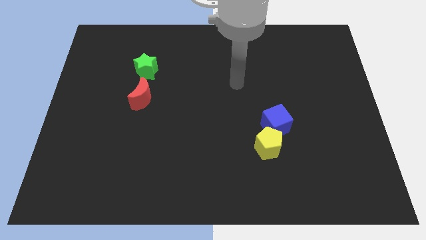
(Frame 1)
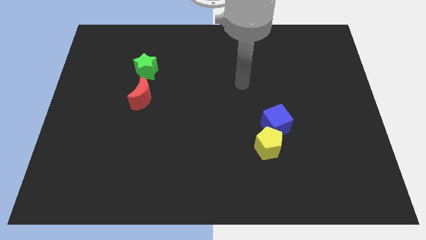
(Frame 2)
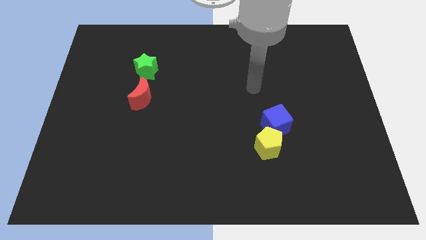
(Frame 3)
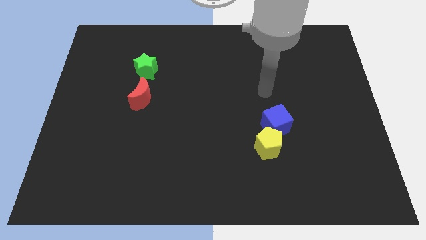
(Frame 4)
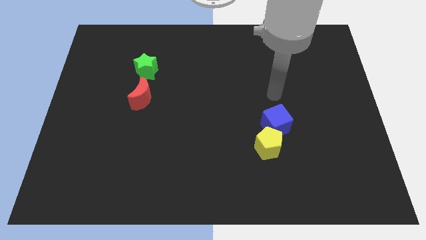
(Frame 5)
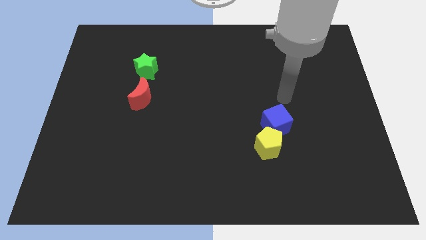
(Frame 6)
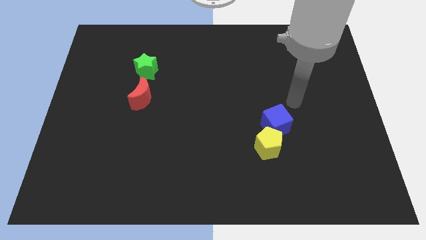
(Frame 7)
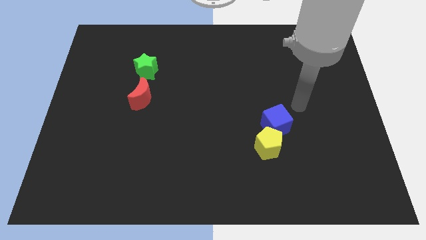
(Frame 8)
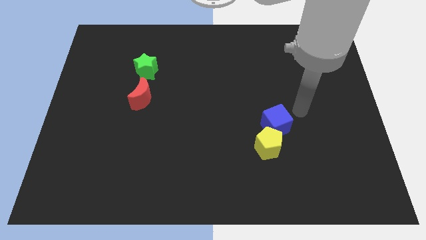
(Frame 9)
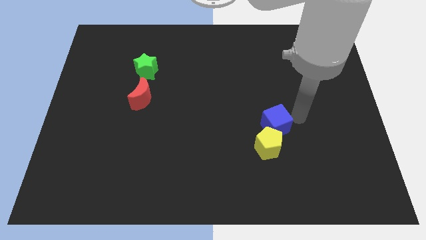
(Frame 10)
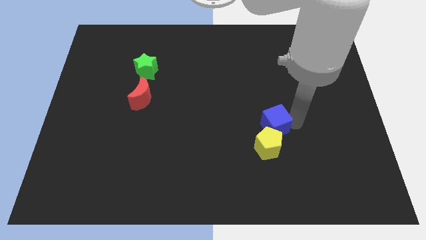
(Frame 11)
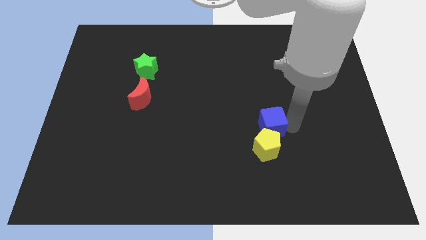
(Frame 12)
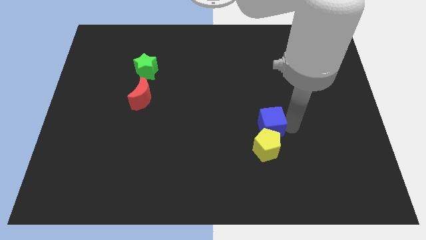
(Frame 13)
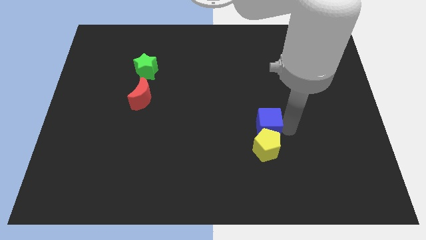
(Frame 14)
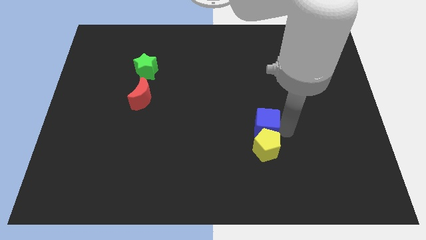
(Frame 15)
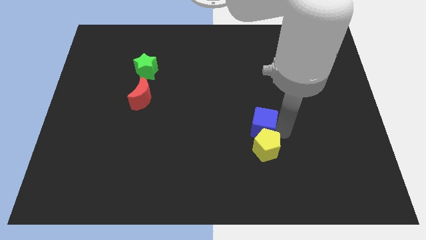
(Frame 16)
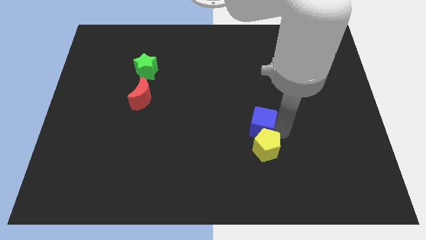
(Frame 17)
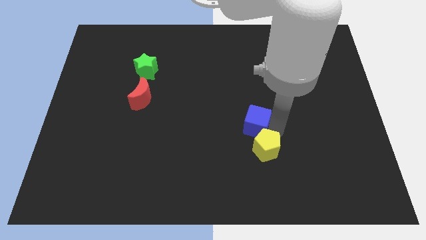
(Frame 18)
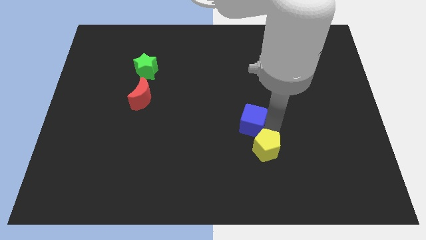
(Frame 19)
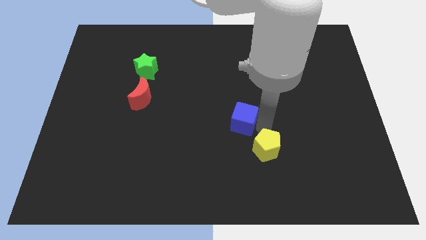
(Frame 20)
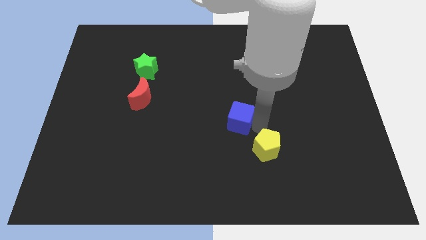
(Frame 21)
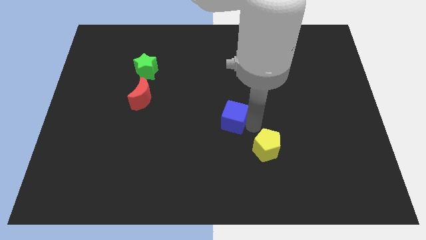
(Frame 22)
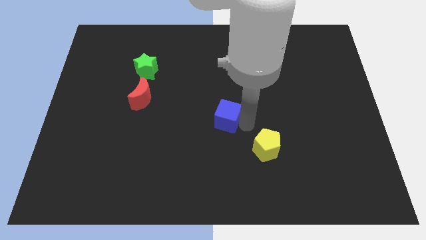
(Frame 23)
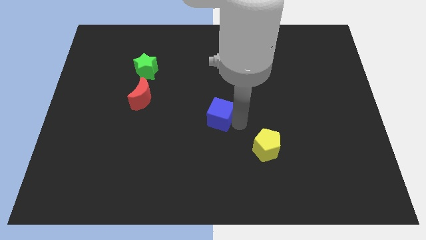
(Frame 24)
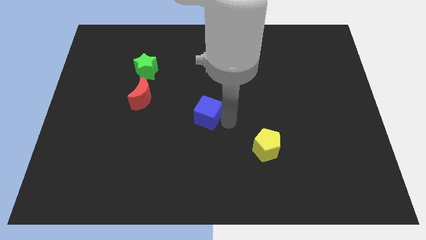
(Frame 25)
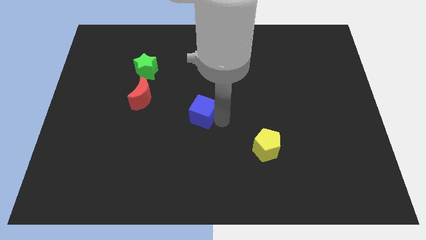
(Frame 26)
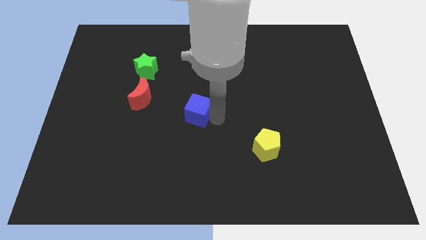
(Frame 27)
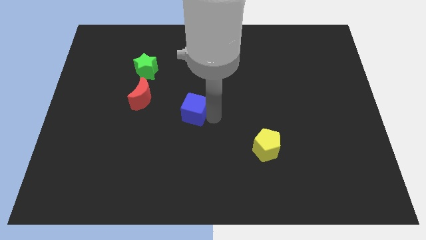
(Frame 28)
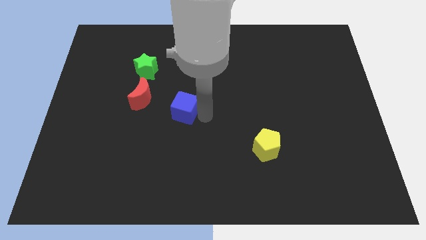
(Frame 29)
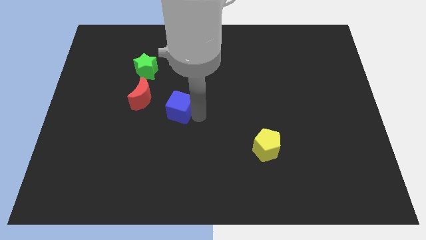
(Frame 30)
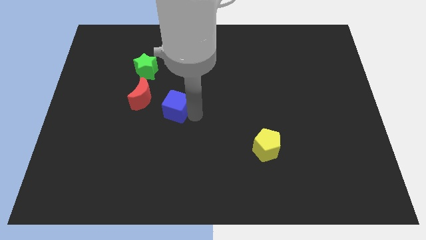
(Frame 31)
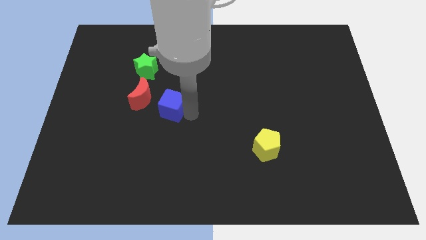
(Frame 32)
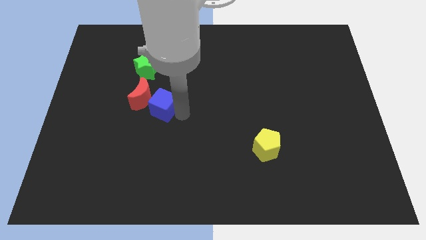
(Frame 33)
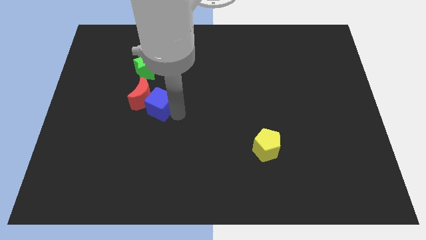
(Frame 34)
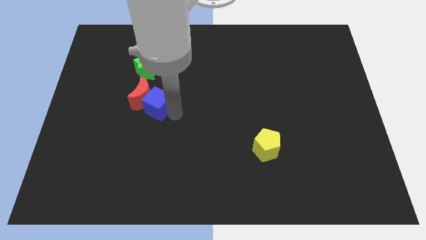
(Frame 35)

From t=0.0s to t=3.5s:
move the blue cube to the moon

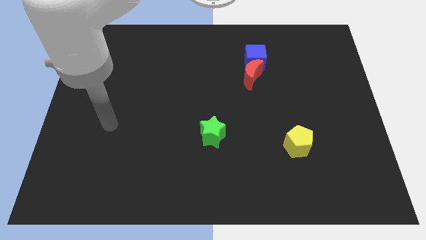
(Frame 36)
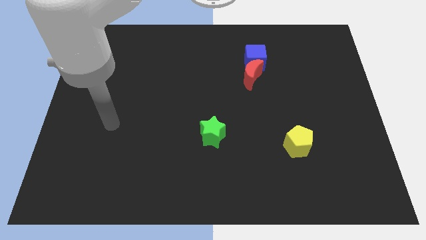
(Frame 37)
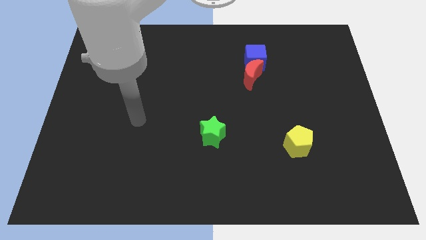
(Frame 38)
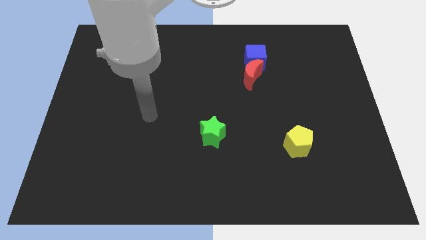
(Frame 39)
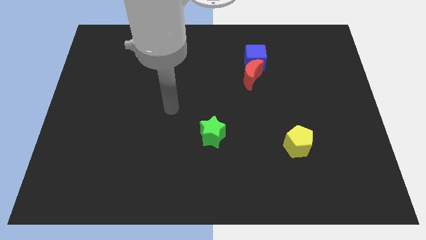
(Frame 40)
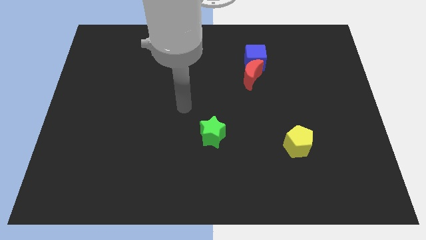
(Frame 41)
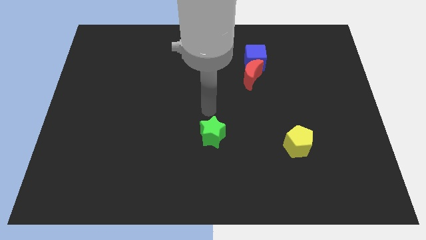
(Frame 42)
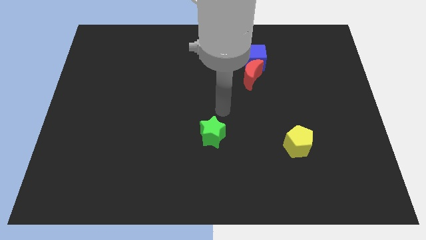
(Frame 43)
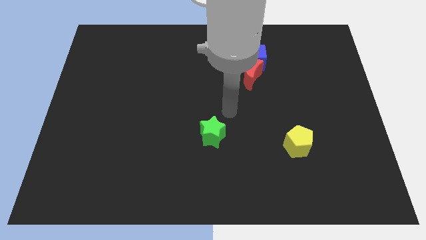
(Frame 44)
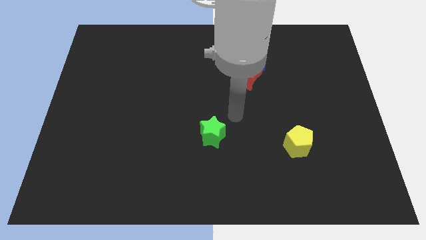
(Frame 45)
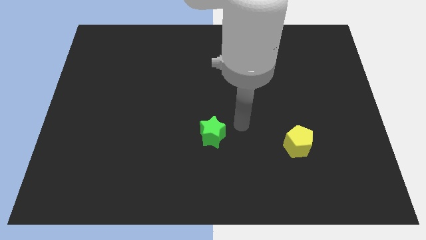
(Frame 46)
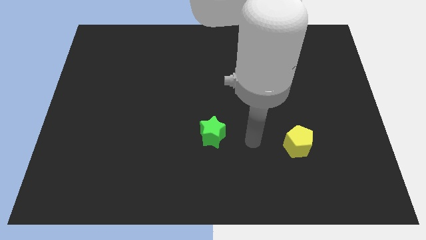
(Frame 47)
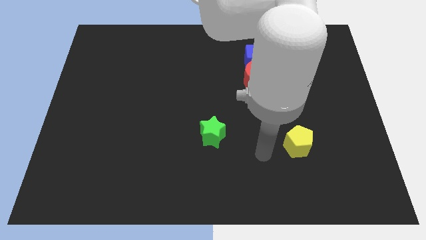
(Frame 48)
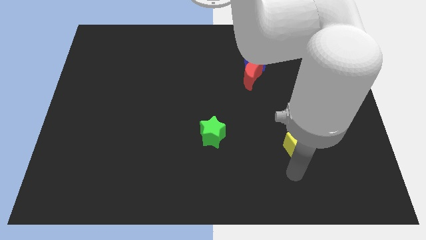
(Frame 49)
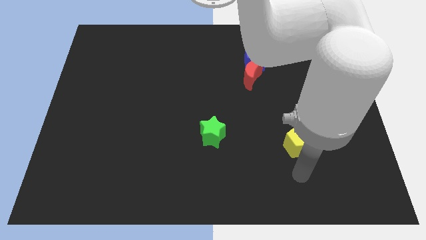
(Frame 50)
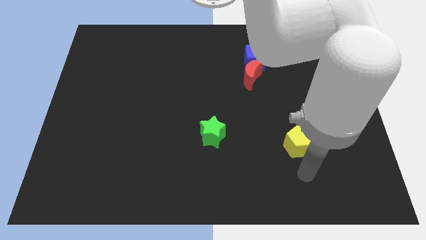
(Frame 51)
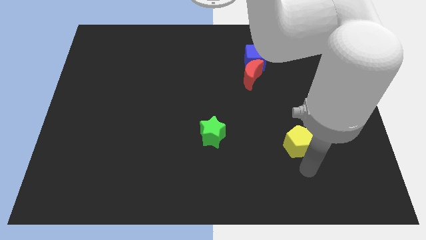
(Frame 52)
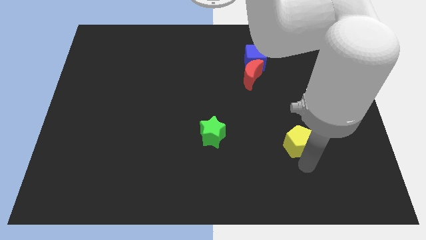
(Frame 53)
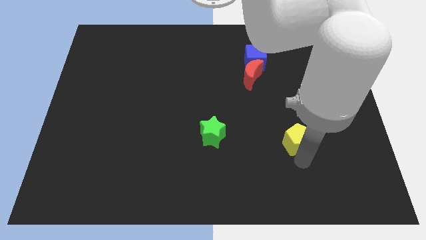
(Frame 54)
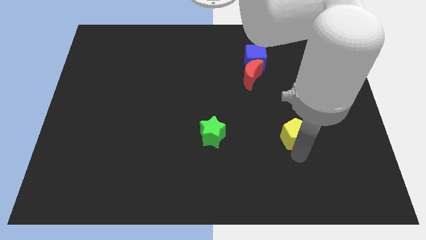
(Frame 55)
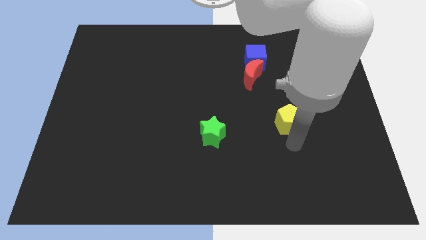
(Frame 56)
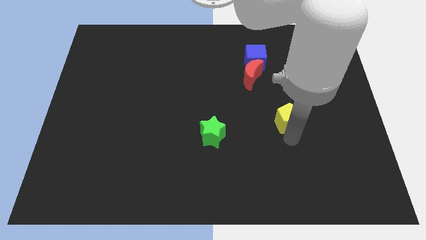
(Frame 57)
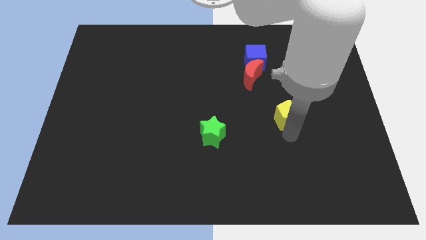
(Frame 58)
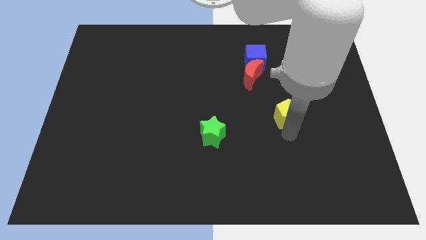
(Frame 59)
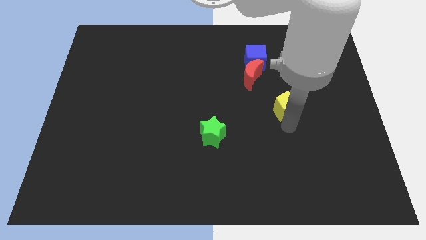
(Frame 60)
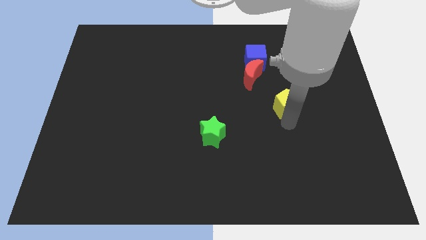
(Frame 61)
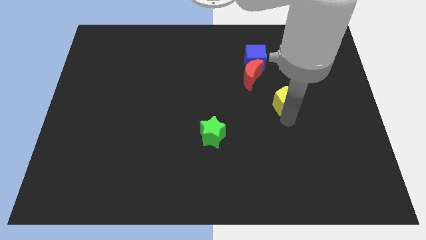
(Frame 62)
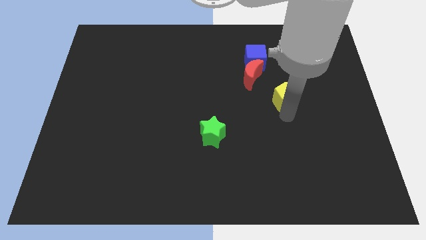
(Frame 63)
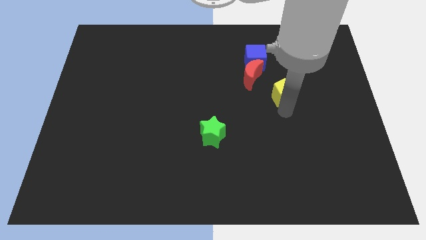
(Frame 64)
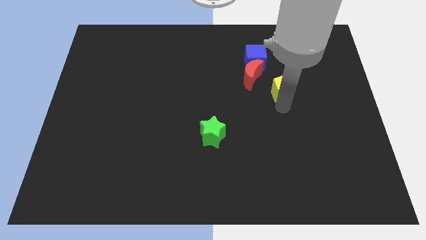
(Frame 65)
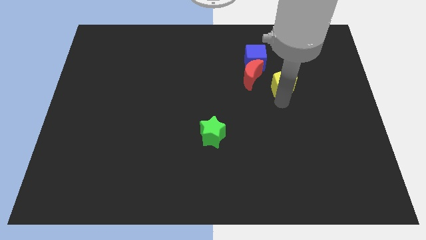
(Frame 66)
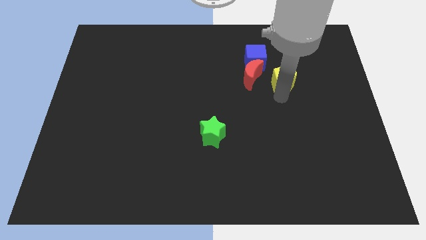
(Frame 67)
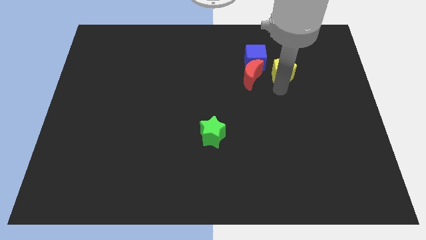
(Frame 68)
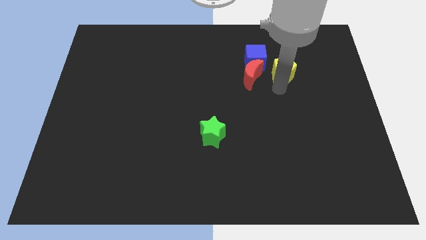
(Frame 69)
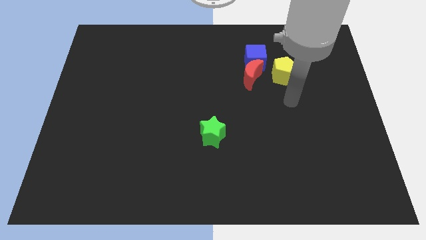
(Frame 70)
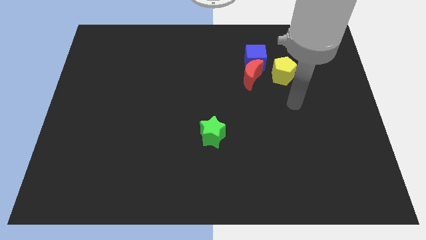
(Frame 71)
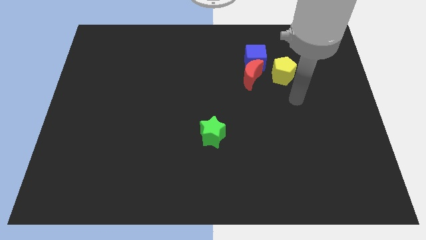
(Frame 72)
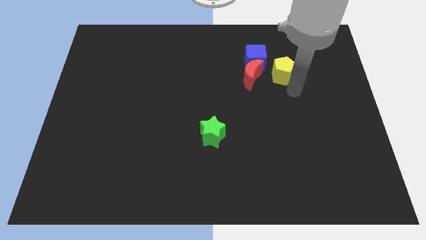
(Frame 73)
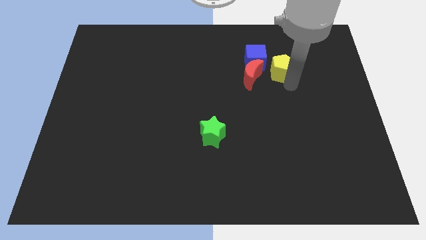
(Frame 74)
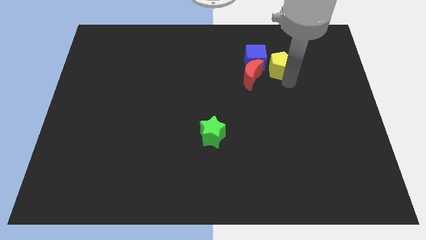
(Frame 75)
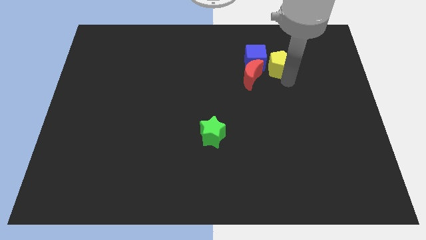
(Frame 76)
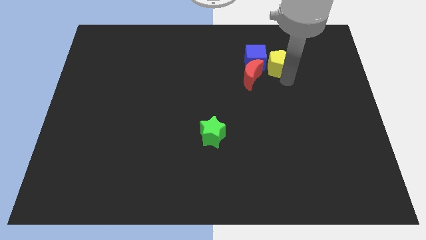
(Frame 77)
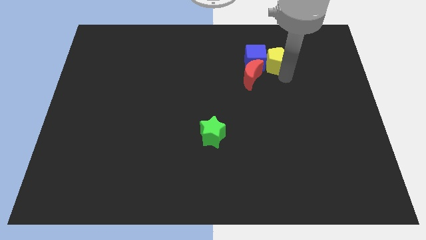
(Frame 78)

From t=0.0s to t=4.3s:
slide the pentagon close to the blue block

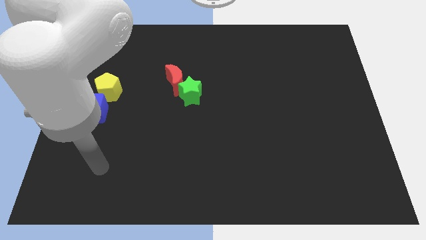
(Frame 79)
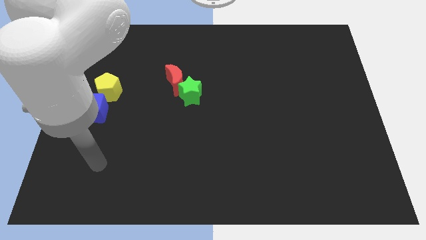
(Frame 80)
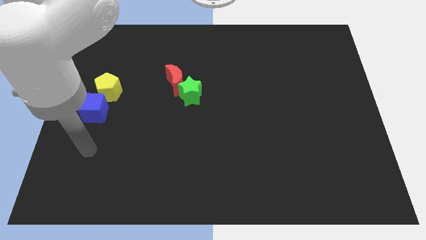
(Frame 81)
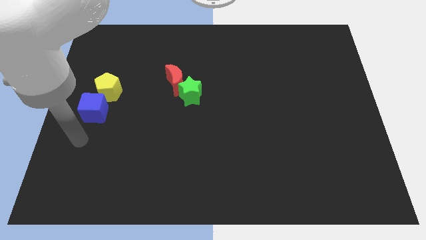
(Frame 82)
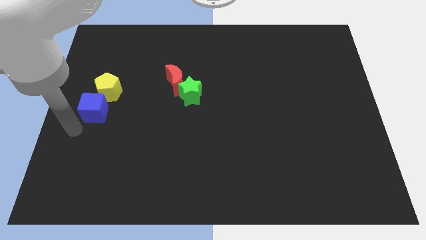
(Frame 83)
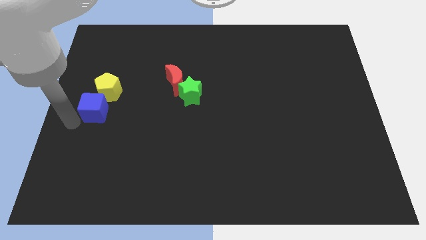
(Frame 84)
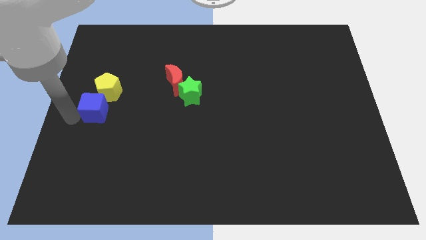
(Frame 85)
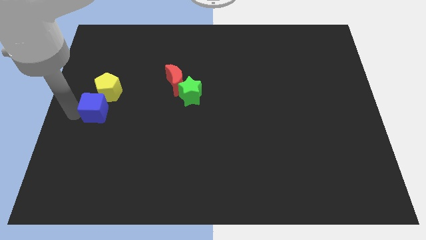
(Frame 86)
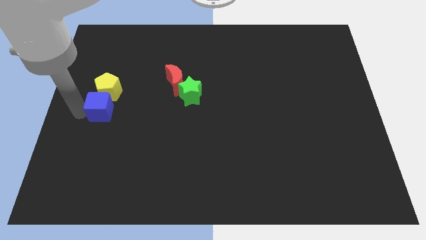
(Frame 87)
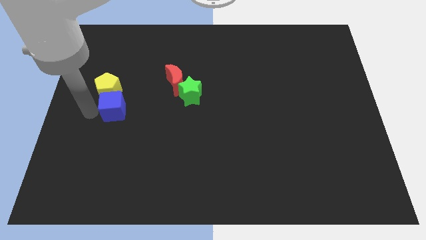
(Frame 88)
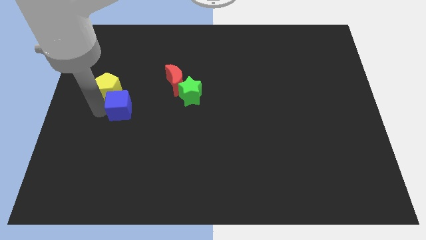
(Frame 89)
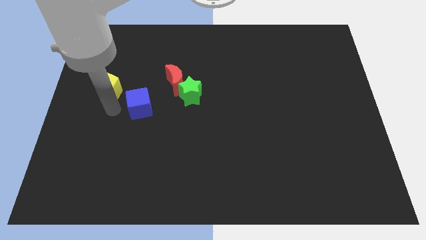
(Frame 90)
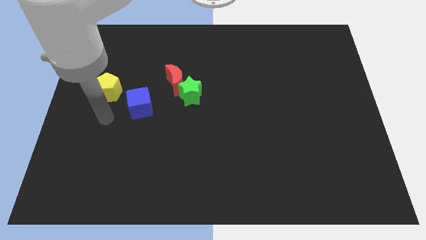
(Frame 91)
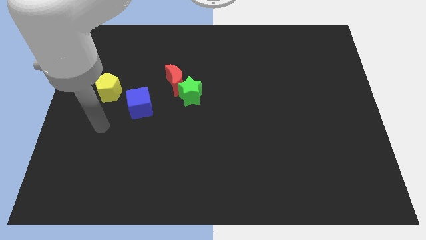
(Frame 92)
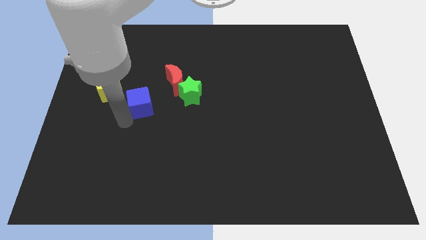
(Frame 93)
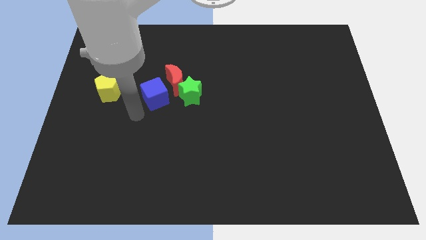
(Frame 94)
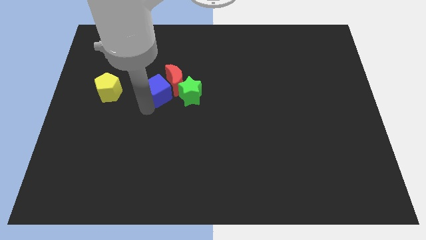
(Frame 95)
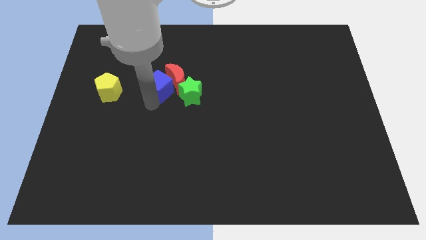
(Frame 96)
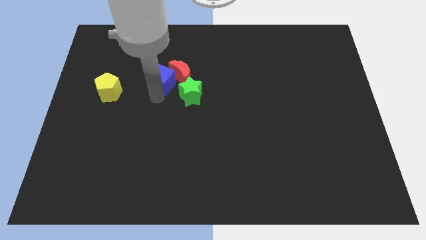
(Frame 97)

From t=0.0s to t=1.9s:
slide the blue cube next to the red block
